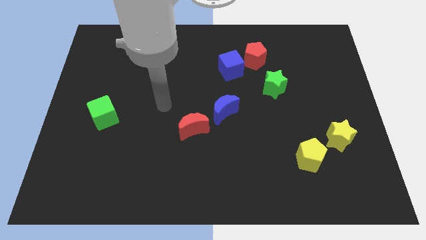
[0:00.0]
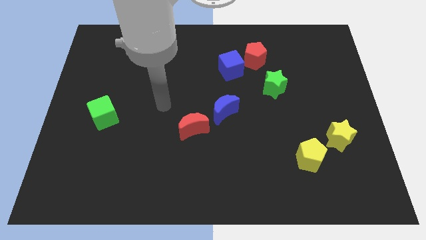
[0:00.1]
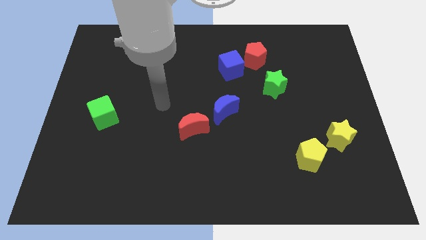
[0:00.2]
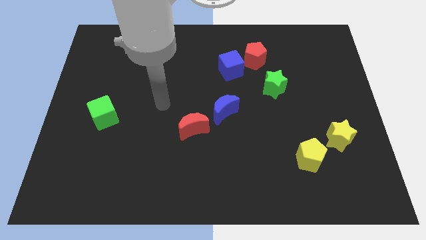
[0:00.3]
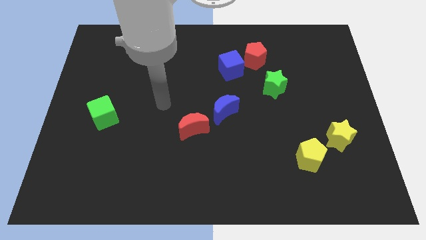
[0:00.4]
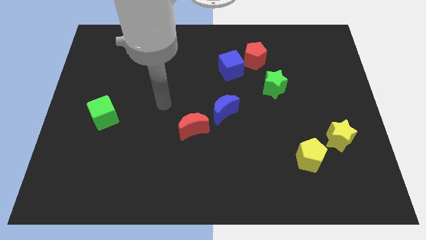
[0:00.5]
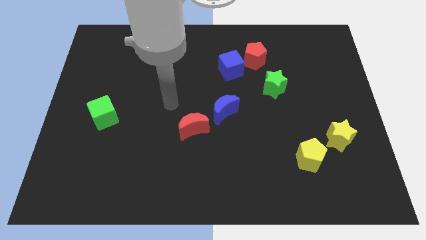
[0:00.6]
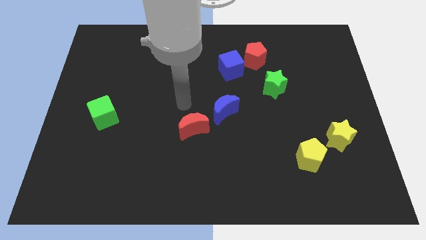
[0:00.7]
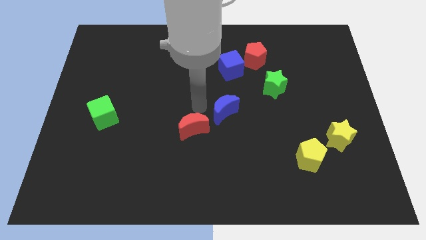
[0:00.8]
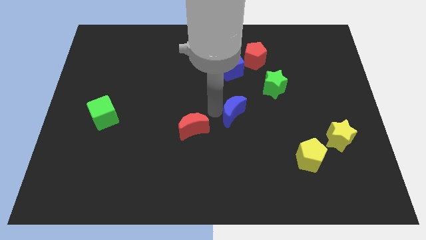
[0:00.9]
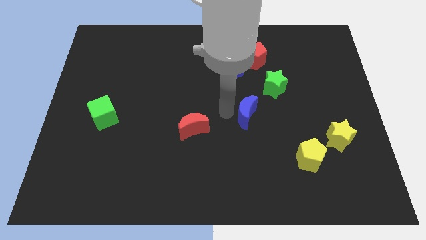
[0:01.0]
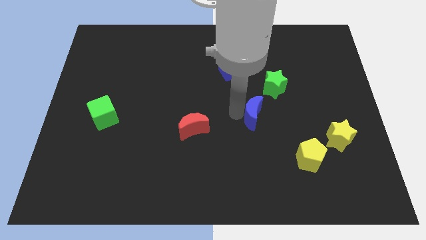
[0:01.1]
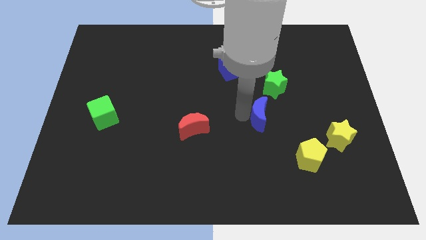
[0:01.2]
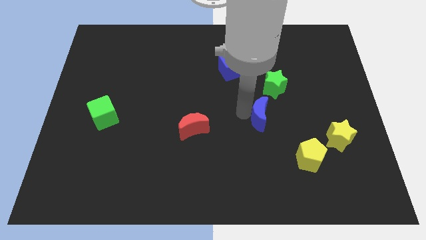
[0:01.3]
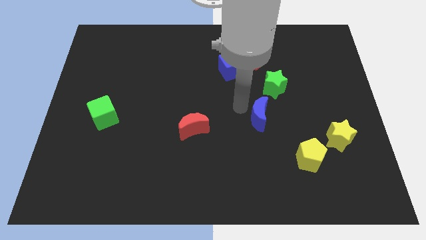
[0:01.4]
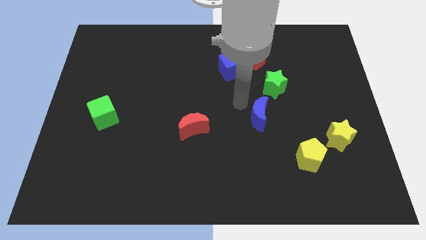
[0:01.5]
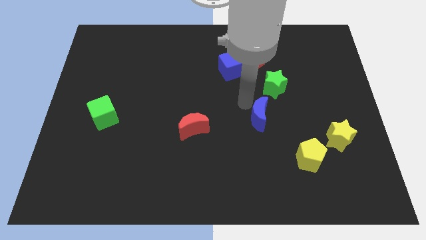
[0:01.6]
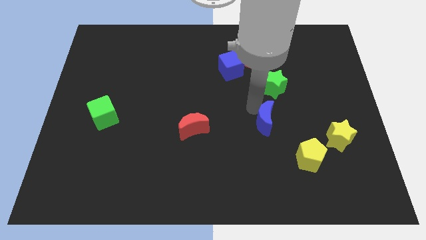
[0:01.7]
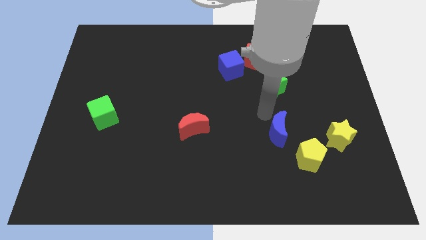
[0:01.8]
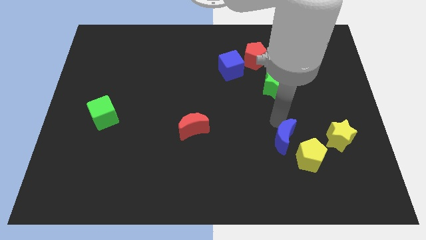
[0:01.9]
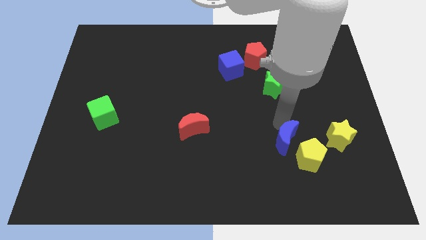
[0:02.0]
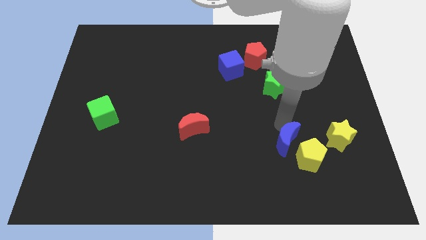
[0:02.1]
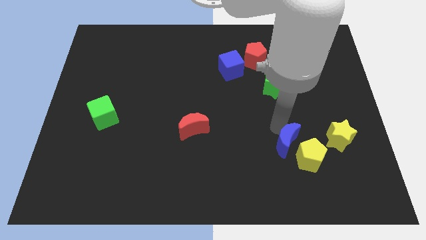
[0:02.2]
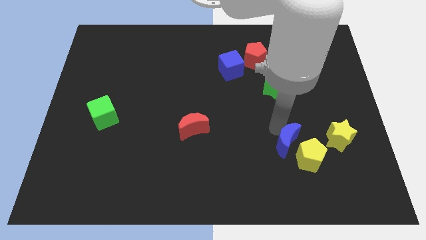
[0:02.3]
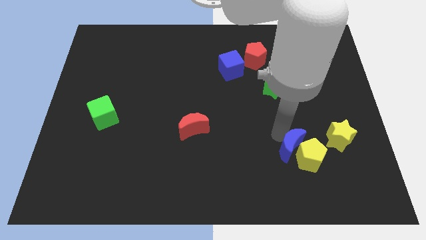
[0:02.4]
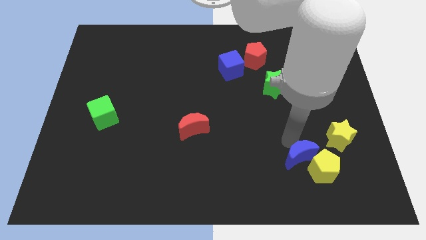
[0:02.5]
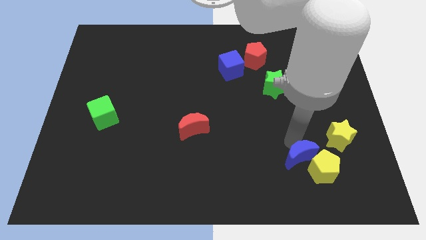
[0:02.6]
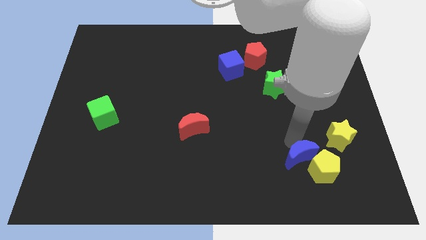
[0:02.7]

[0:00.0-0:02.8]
move the blue moon above the yellow pentagon

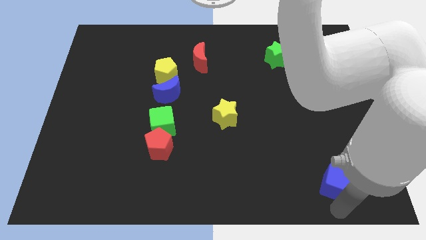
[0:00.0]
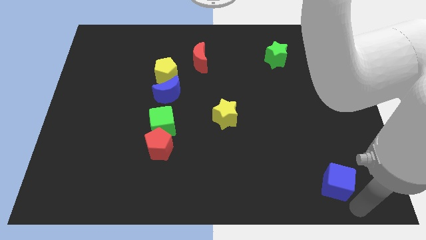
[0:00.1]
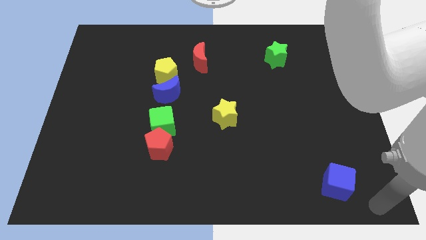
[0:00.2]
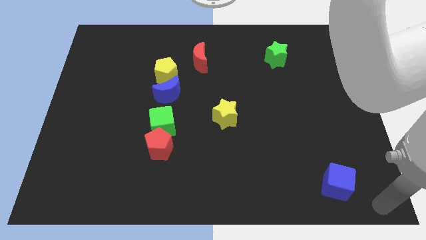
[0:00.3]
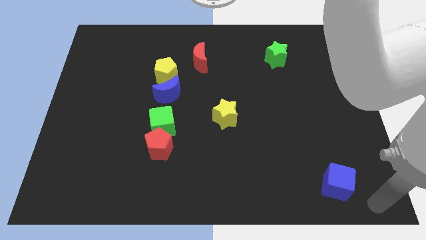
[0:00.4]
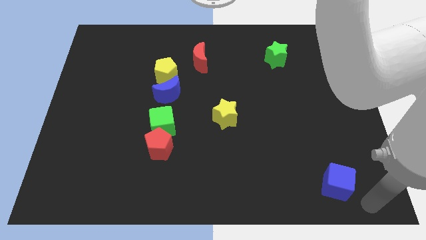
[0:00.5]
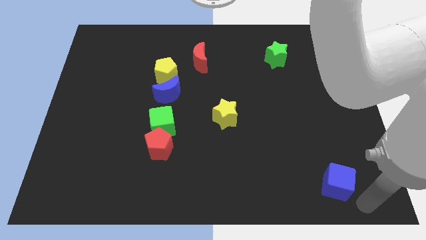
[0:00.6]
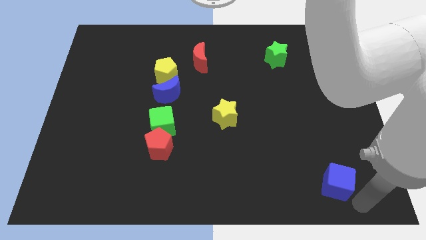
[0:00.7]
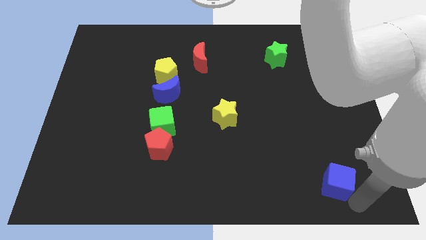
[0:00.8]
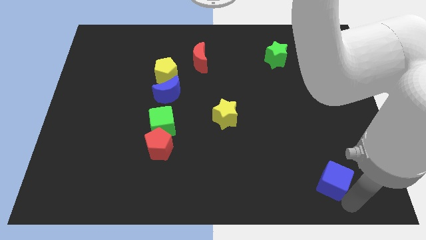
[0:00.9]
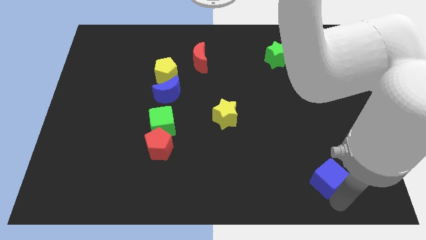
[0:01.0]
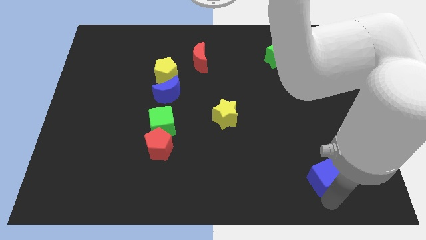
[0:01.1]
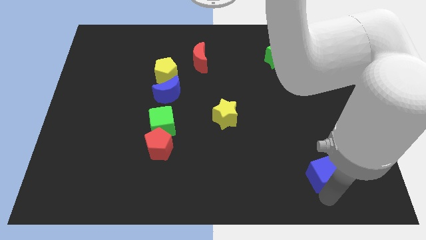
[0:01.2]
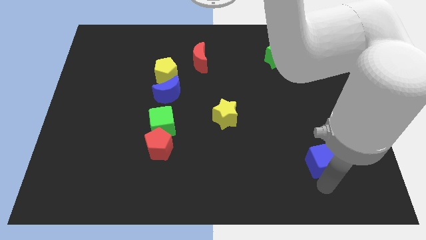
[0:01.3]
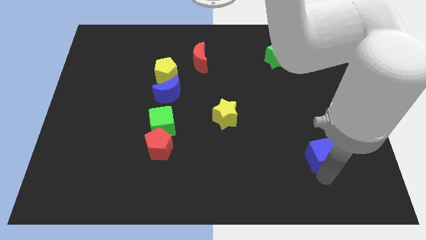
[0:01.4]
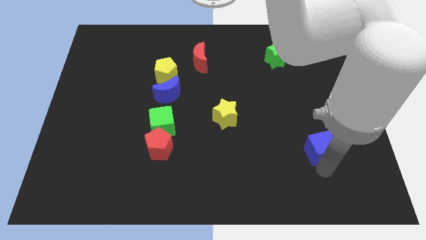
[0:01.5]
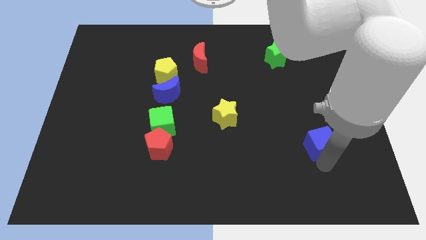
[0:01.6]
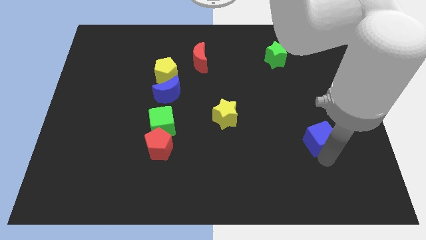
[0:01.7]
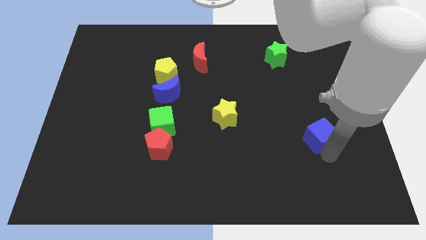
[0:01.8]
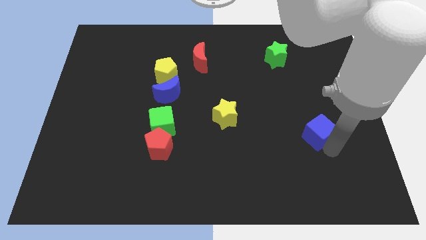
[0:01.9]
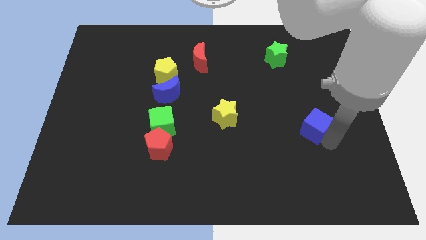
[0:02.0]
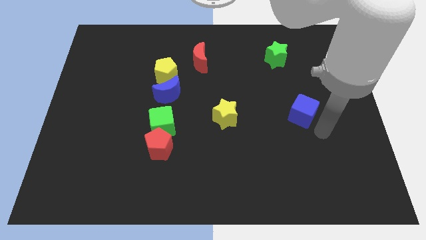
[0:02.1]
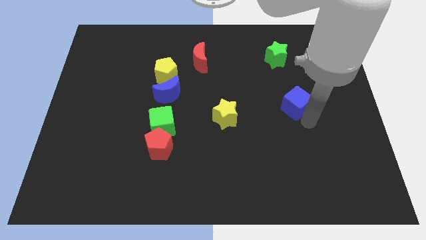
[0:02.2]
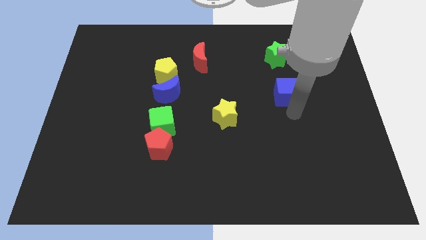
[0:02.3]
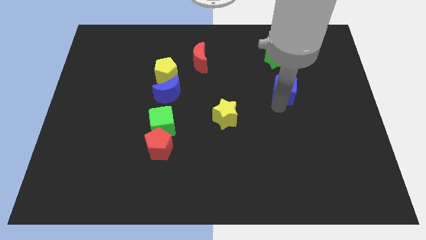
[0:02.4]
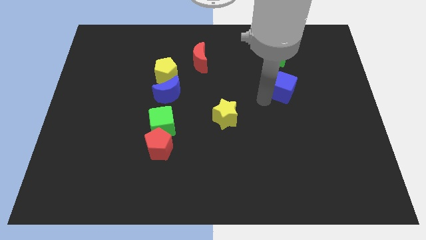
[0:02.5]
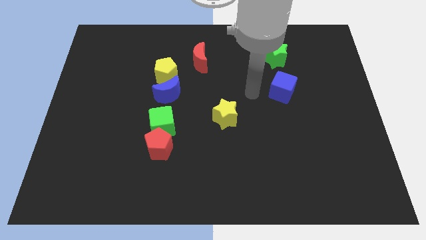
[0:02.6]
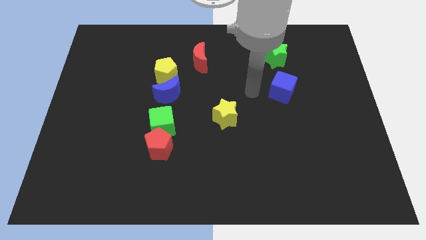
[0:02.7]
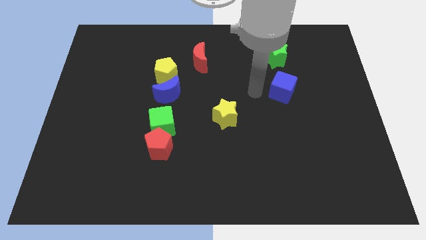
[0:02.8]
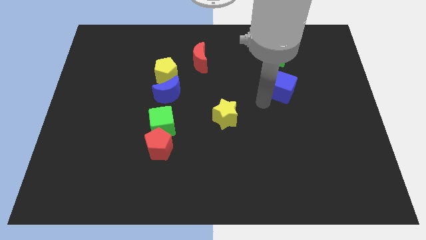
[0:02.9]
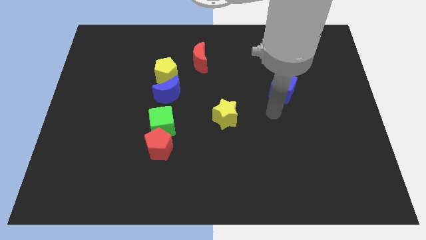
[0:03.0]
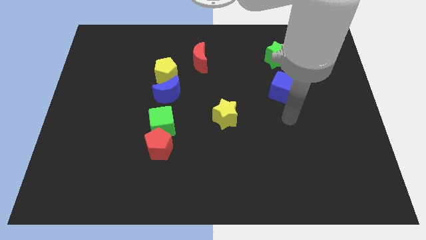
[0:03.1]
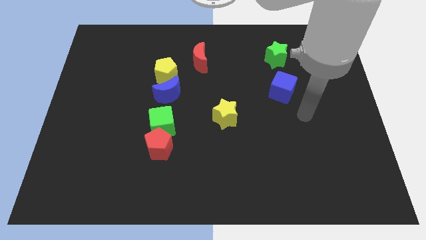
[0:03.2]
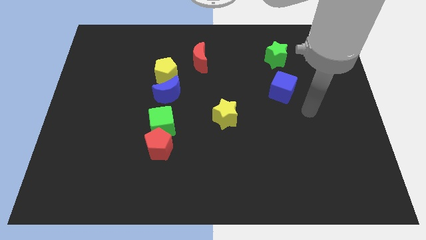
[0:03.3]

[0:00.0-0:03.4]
push the blue cube to the bottom side of the green star

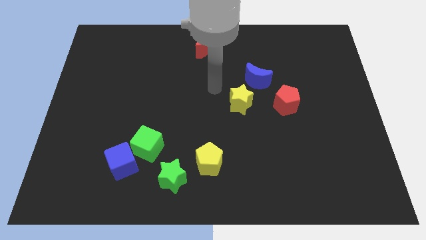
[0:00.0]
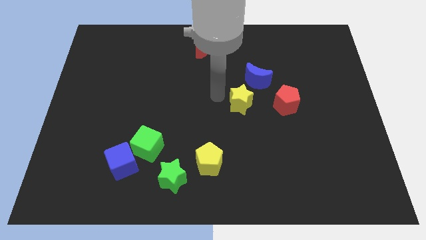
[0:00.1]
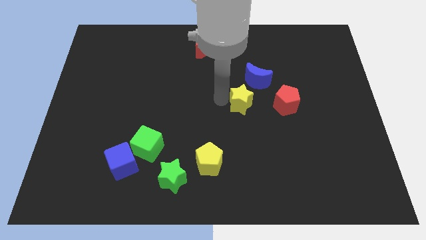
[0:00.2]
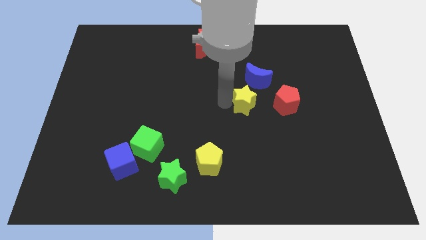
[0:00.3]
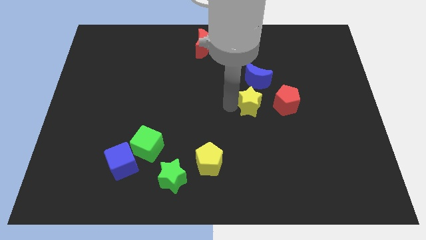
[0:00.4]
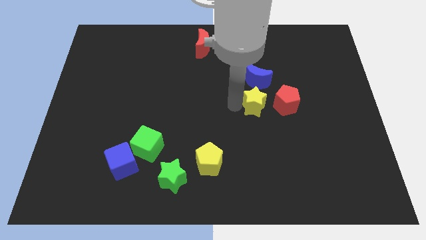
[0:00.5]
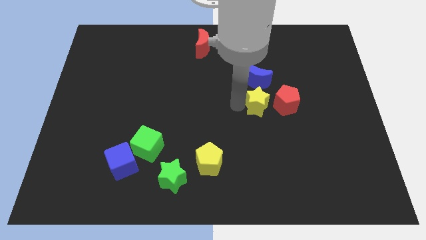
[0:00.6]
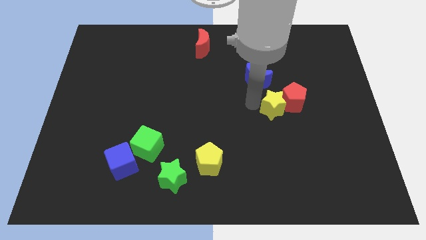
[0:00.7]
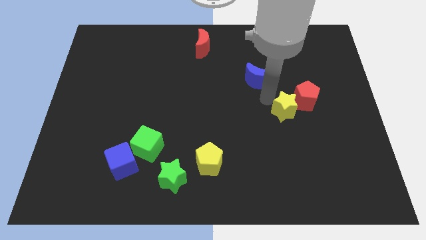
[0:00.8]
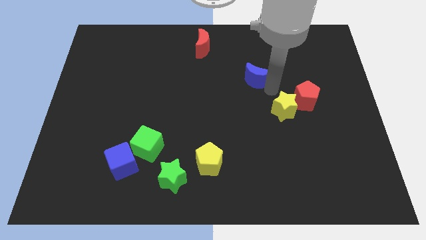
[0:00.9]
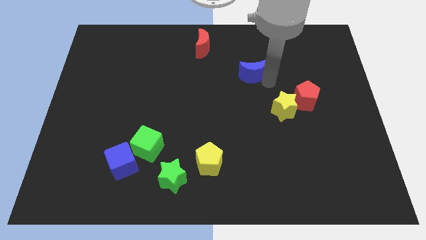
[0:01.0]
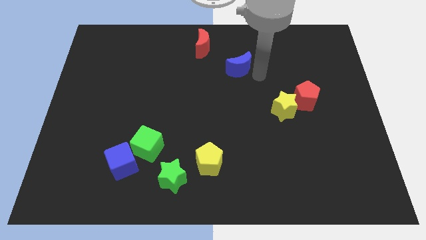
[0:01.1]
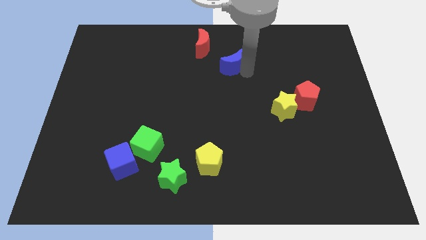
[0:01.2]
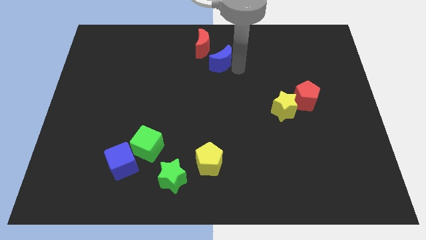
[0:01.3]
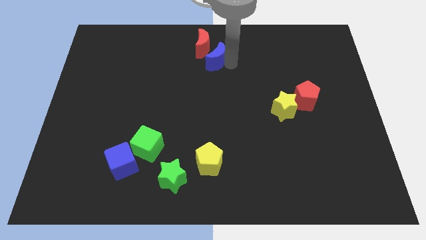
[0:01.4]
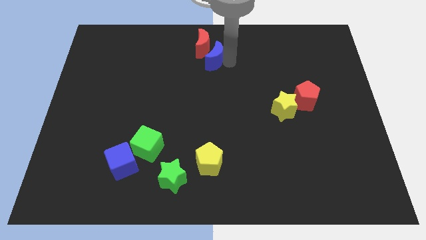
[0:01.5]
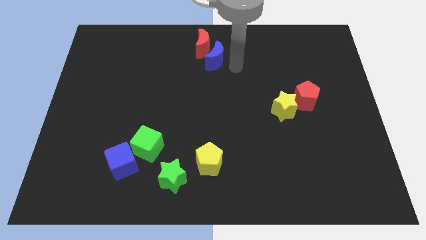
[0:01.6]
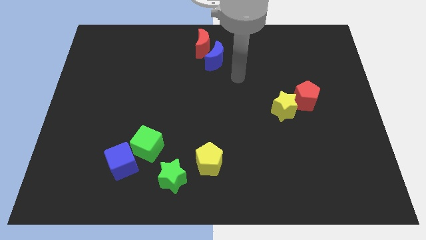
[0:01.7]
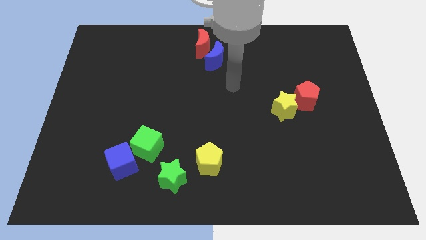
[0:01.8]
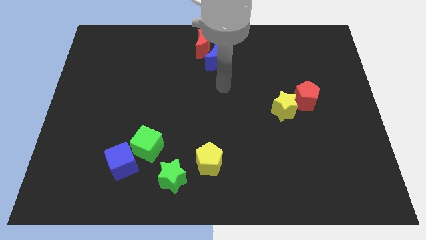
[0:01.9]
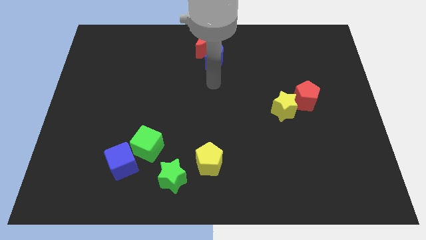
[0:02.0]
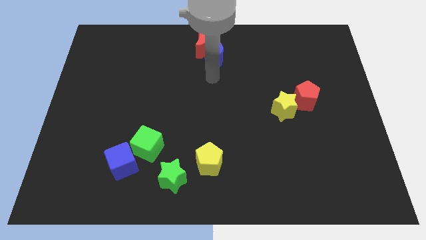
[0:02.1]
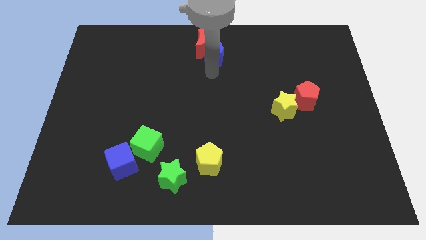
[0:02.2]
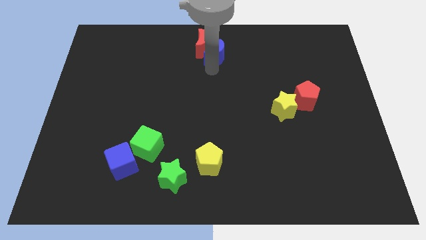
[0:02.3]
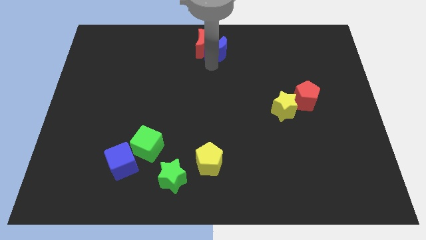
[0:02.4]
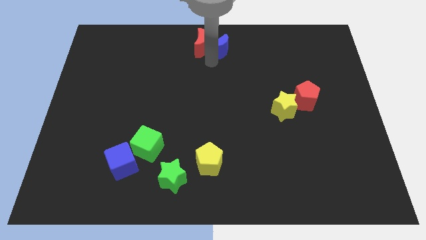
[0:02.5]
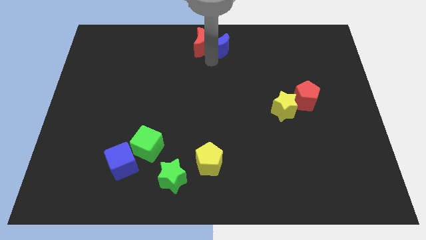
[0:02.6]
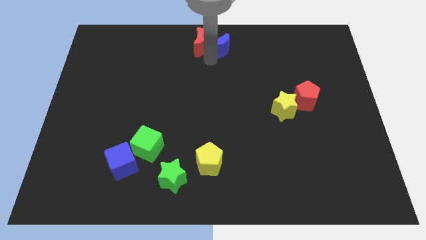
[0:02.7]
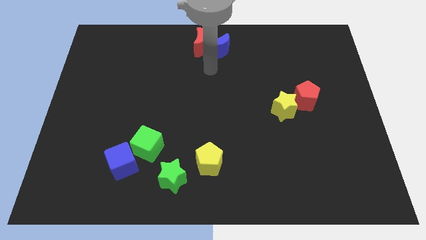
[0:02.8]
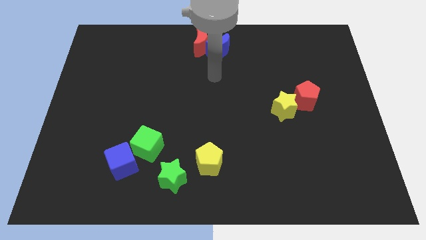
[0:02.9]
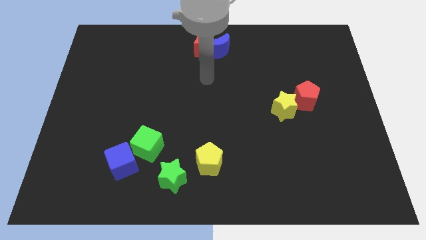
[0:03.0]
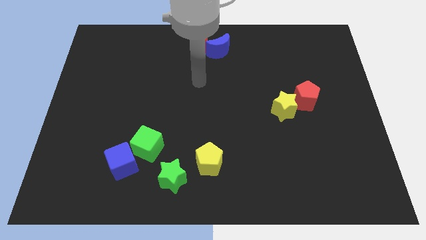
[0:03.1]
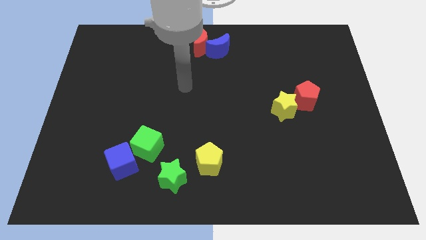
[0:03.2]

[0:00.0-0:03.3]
push blue moon into red moon
